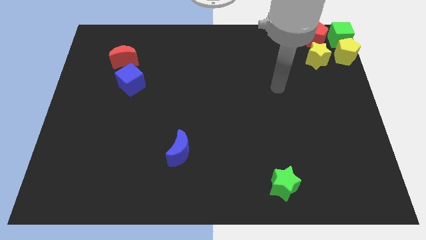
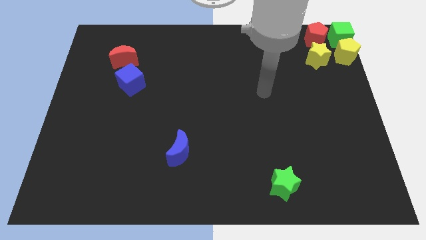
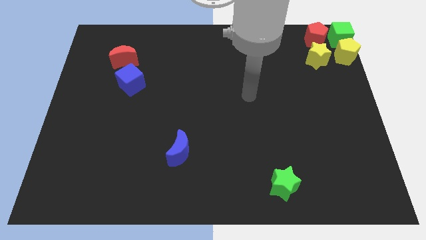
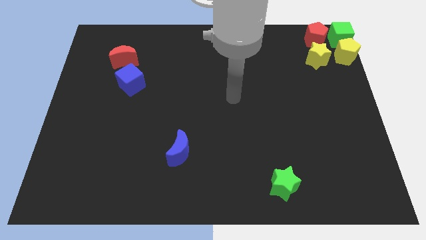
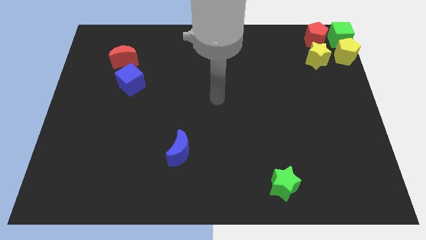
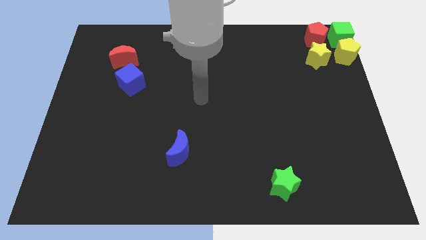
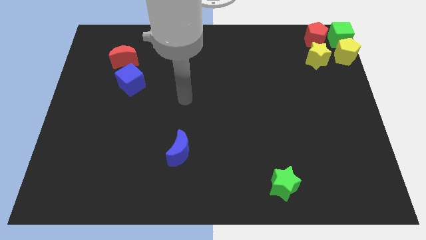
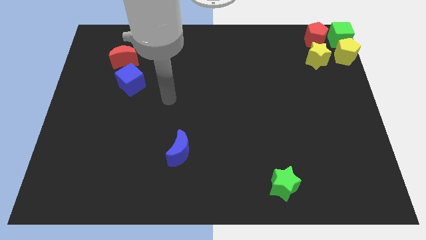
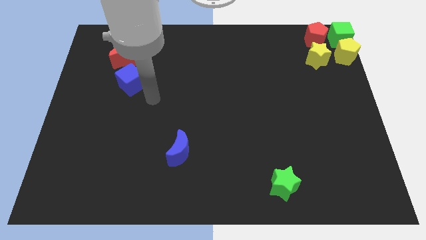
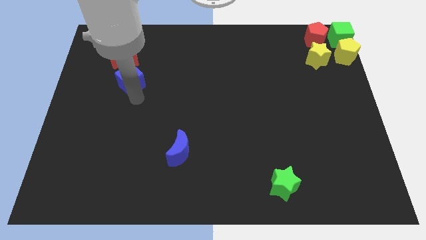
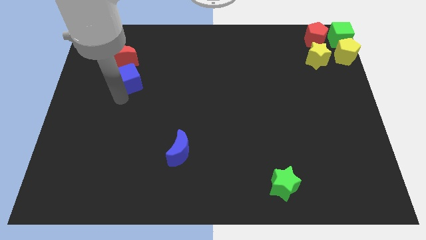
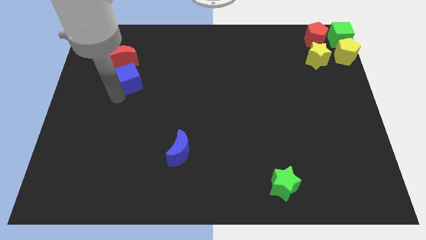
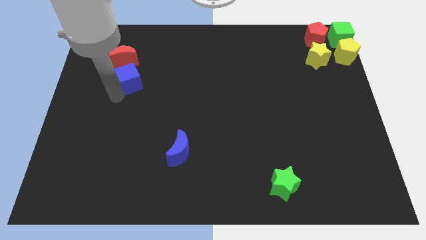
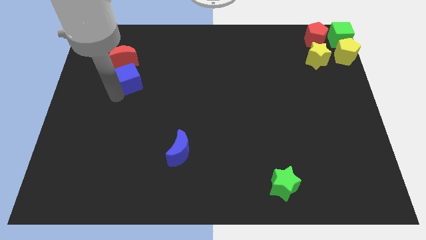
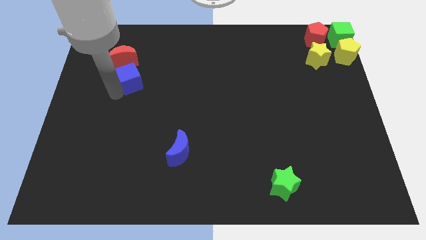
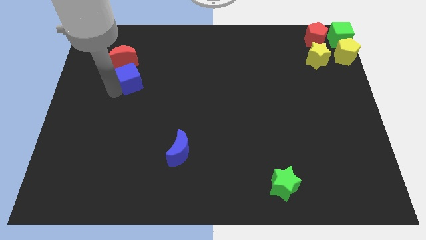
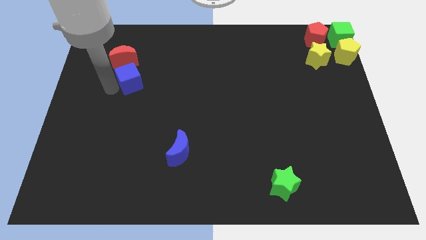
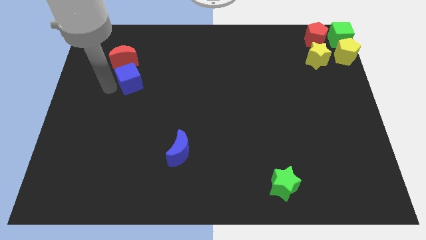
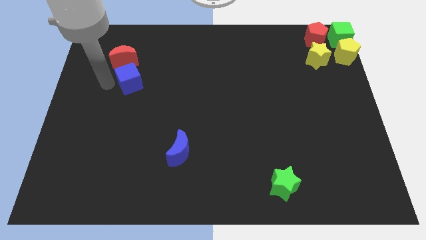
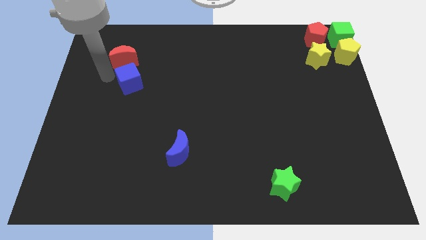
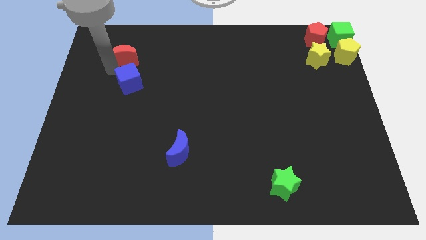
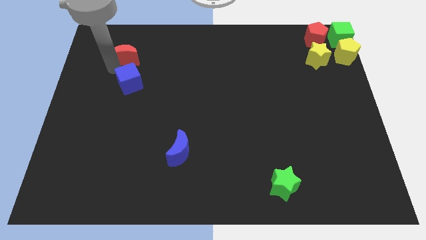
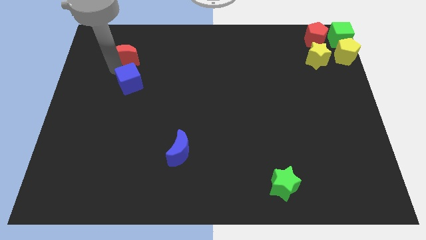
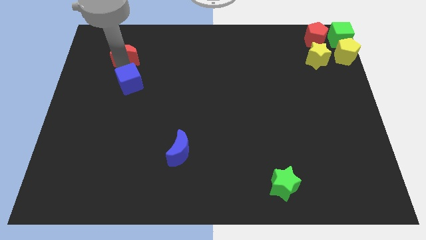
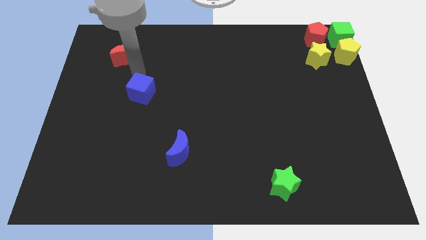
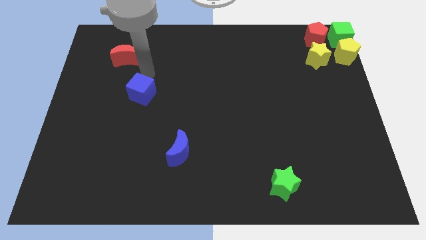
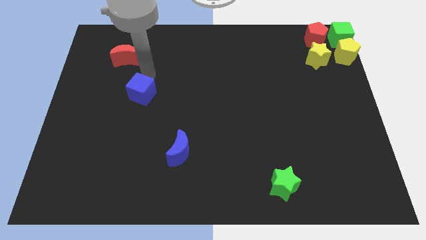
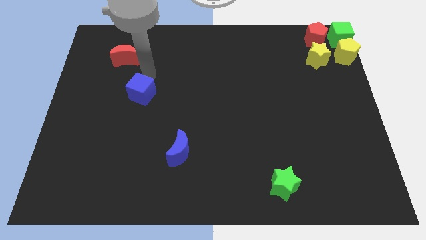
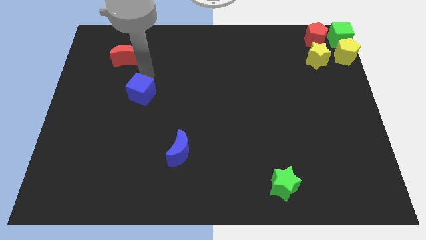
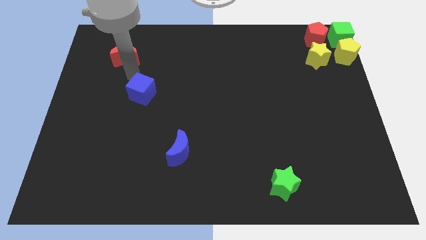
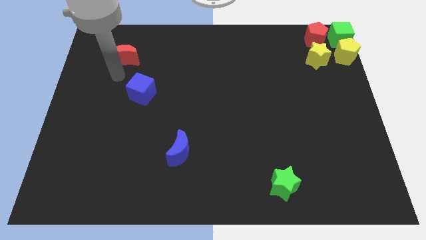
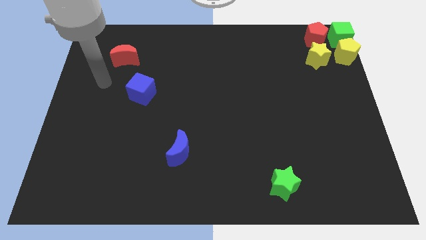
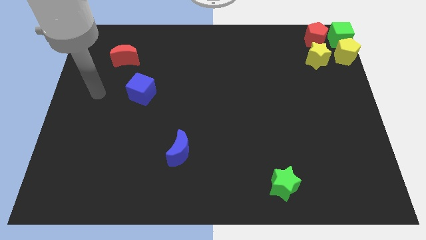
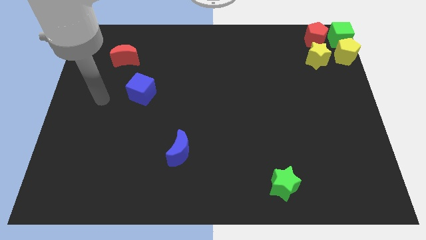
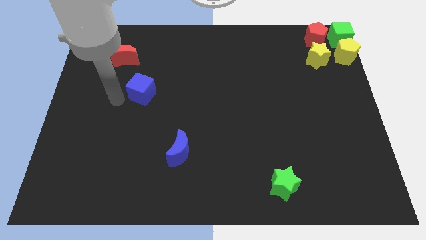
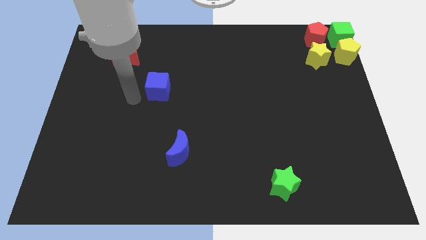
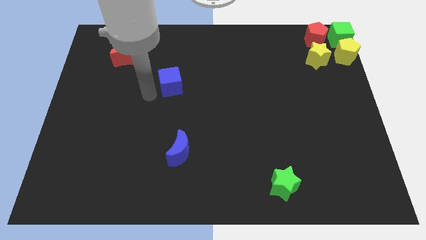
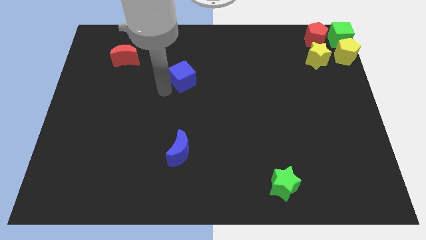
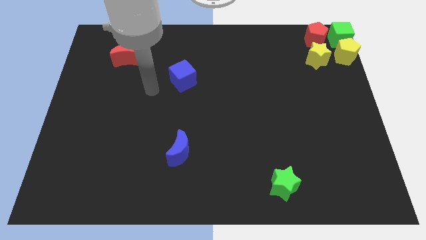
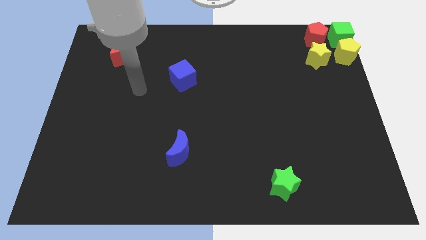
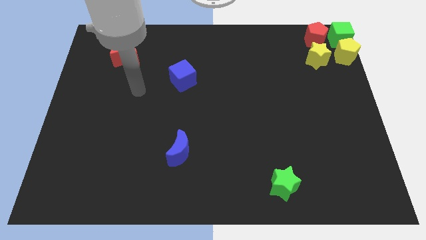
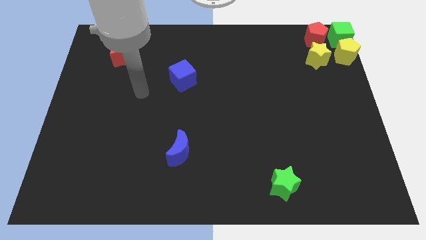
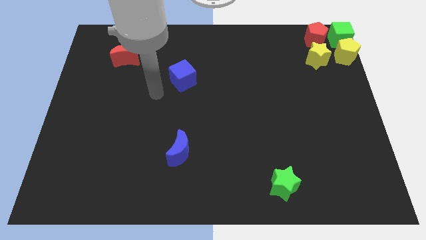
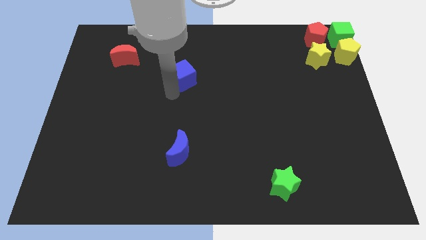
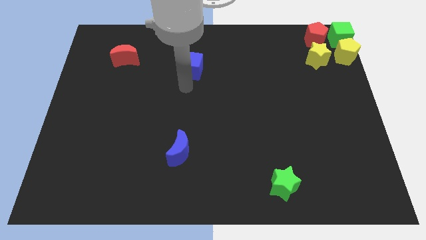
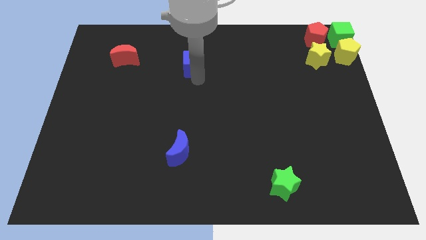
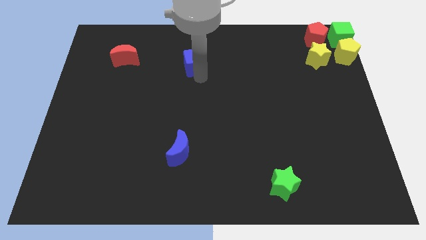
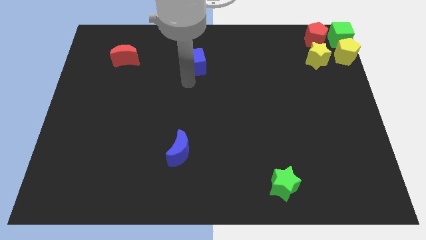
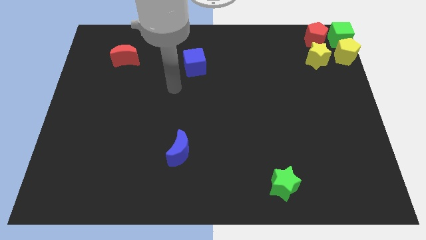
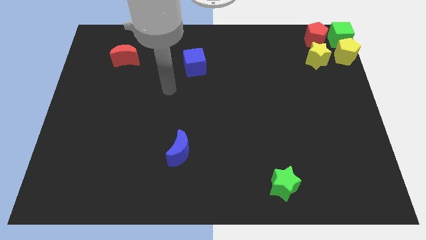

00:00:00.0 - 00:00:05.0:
place the blue cube to the right of the red crescent

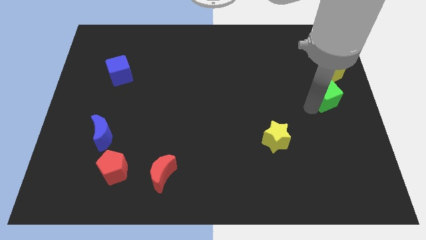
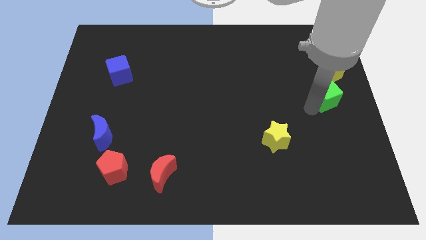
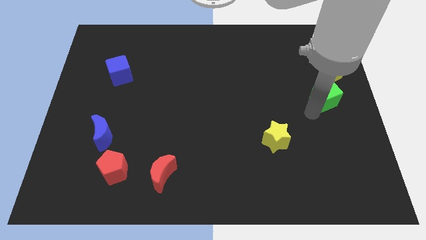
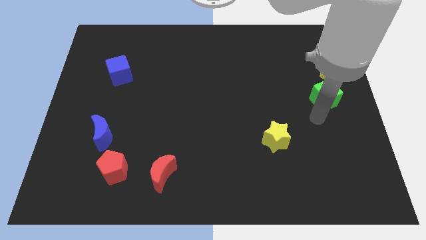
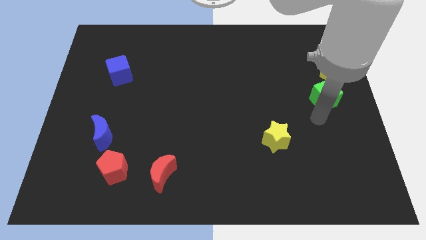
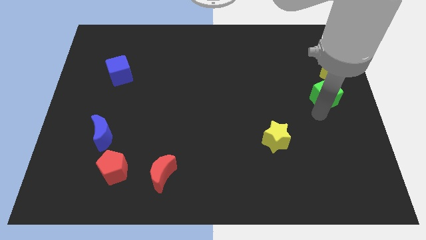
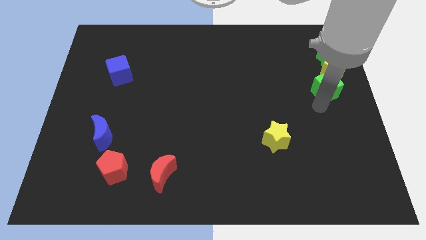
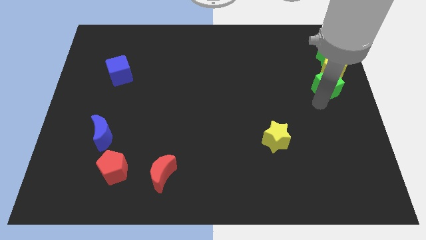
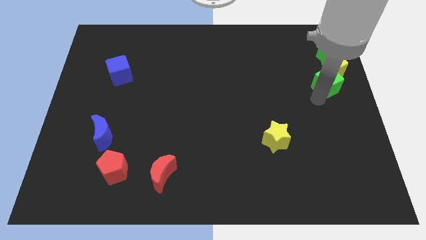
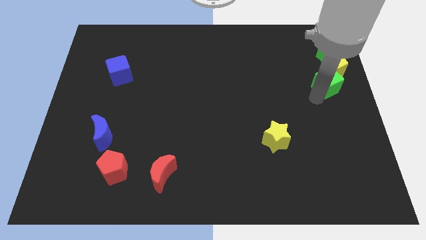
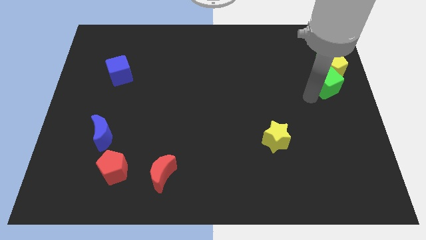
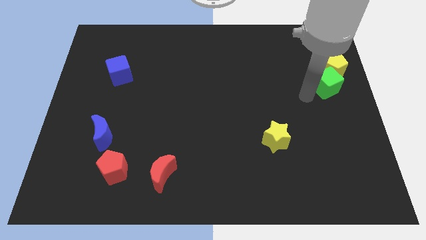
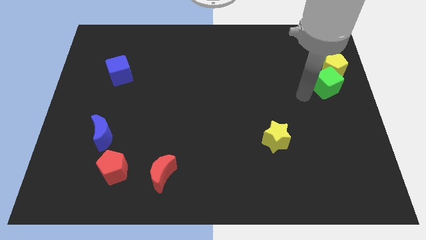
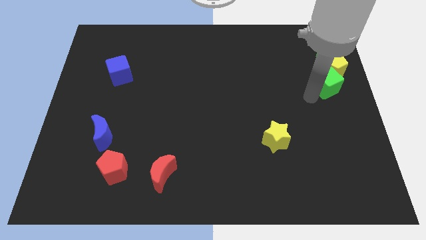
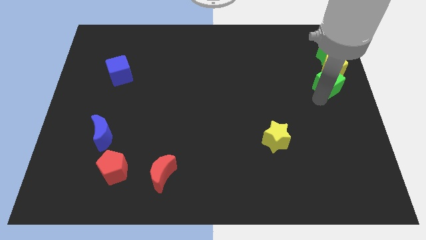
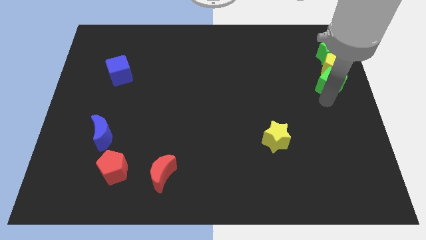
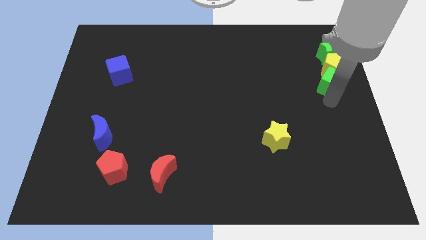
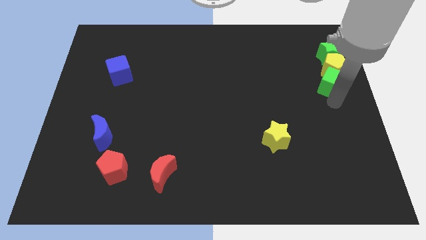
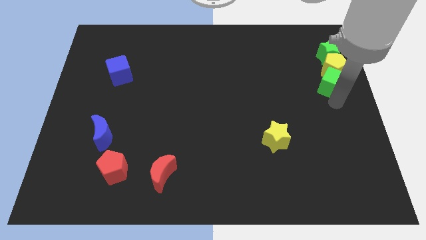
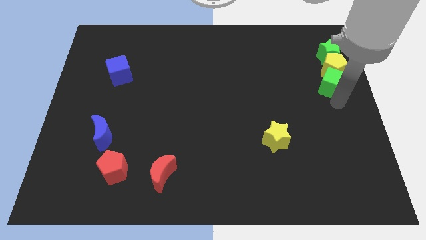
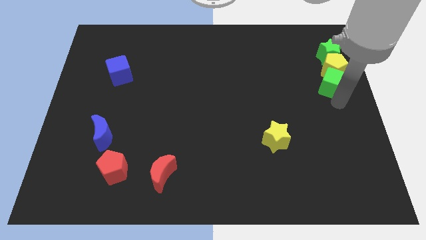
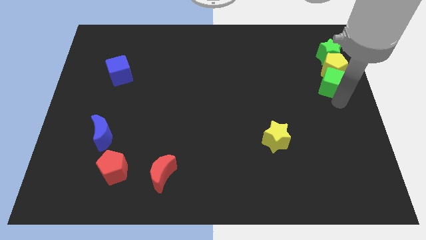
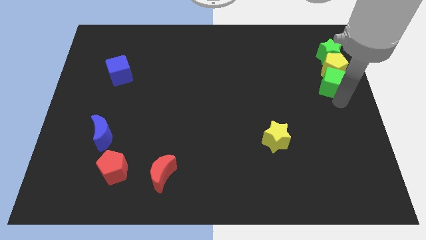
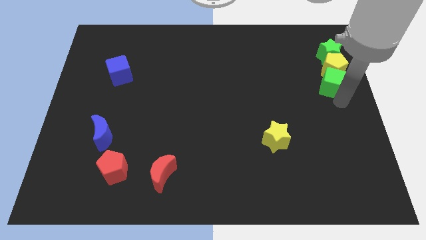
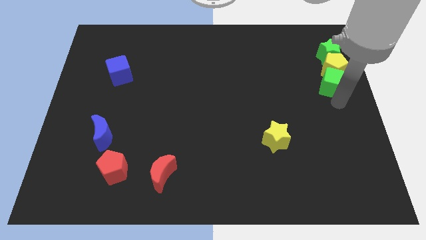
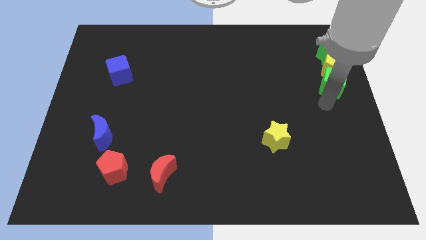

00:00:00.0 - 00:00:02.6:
push the green cube towards the yellow pentagon

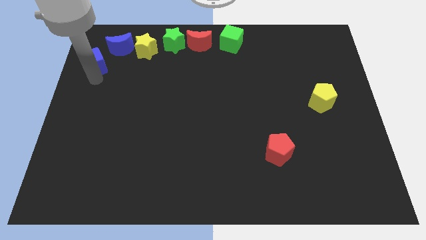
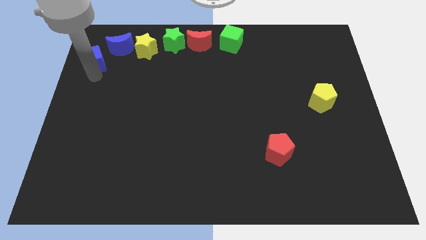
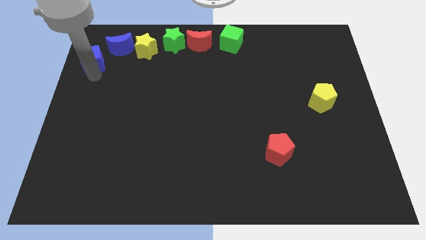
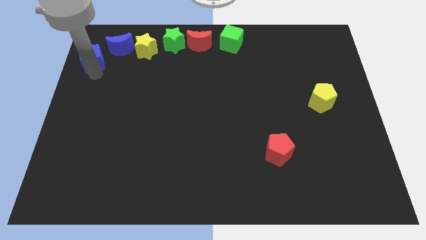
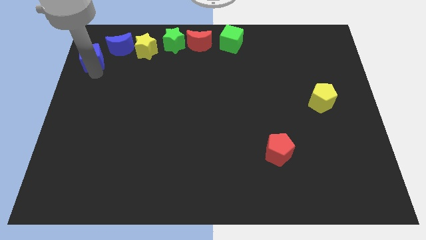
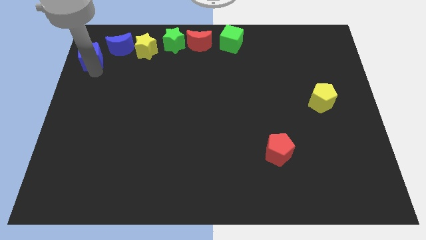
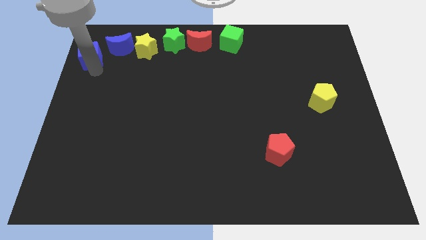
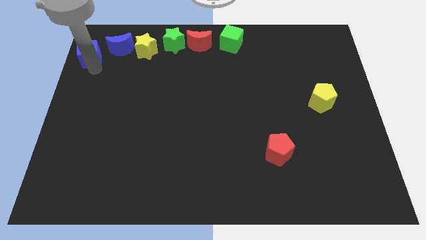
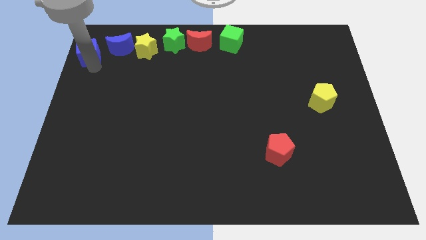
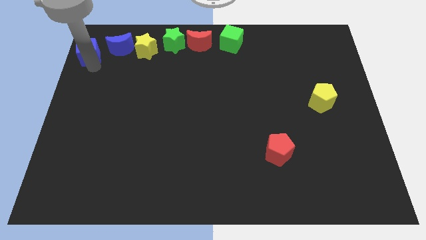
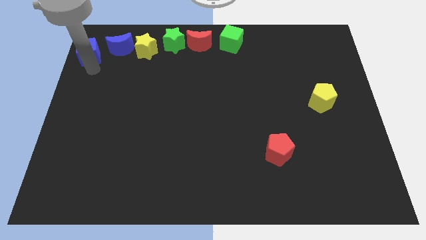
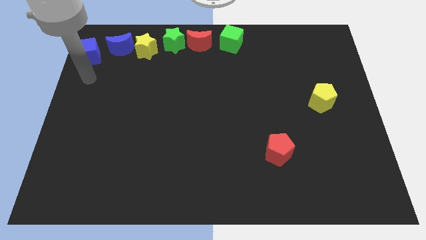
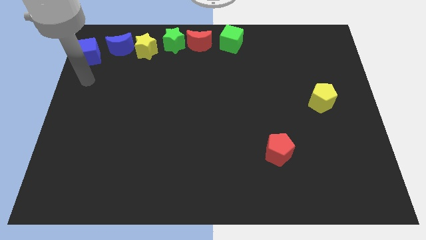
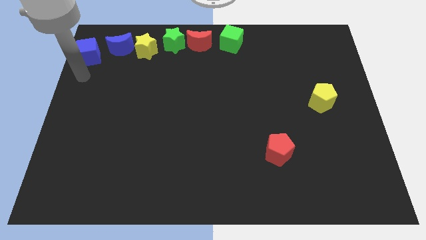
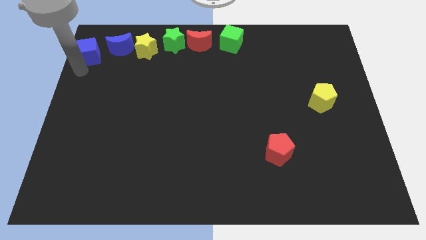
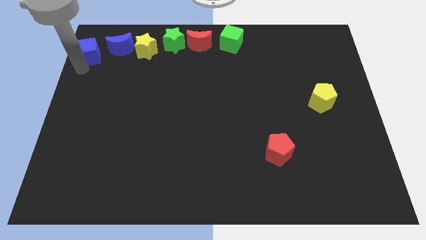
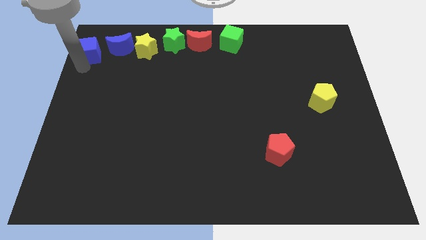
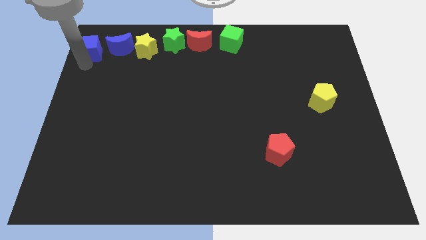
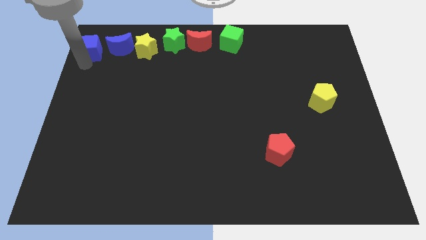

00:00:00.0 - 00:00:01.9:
push the blue cube to the top left of the board
